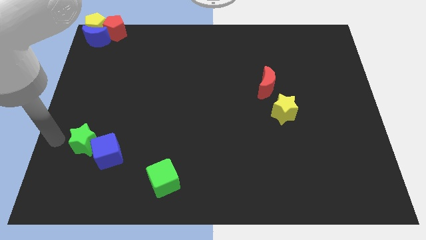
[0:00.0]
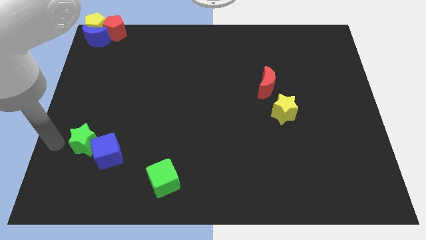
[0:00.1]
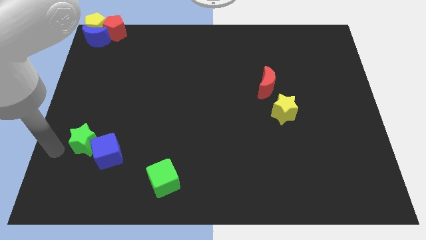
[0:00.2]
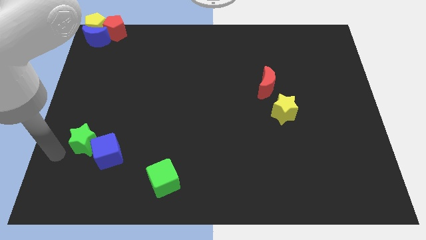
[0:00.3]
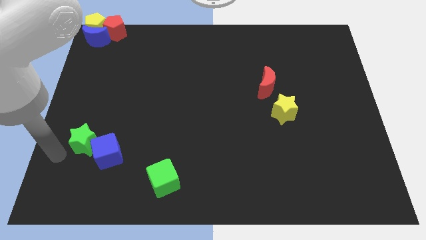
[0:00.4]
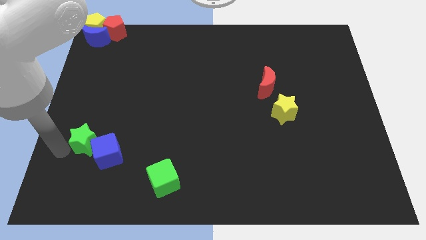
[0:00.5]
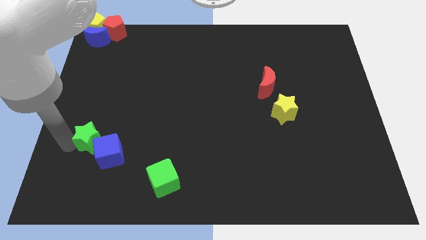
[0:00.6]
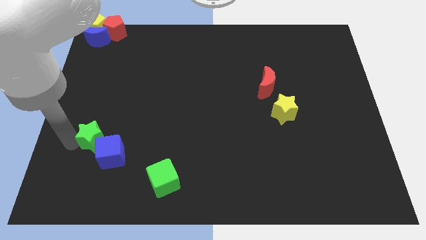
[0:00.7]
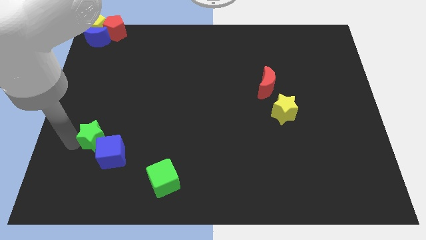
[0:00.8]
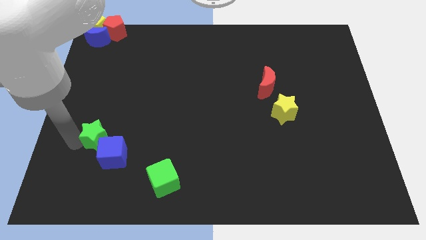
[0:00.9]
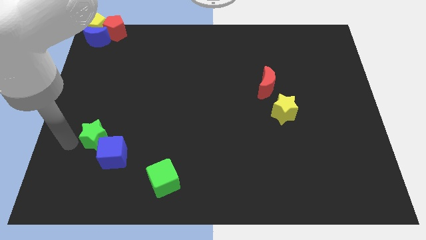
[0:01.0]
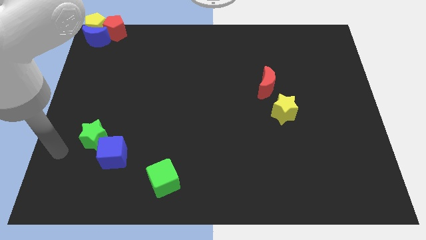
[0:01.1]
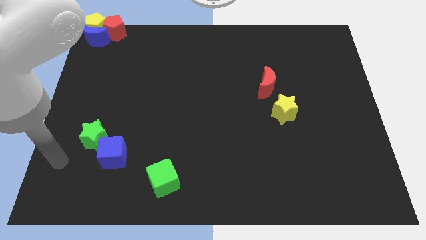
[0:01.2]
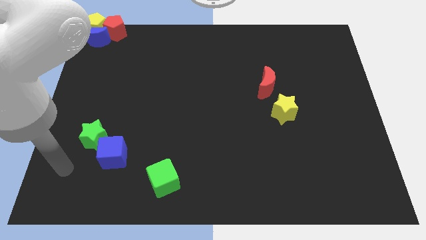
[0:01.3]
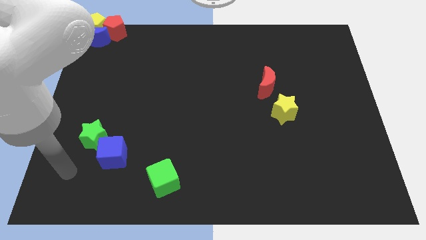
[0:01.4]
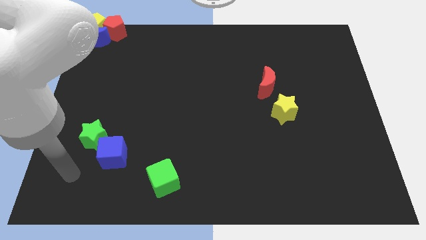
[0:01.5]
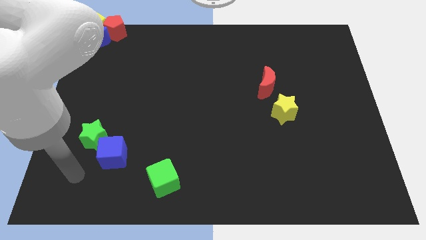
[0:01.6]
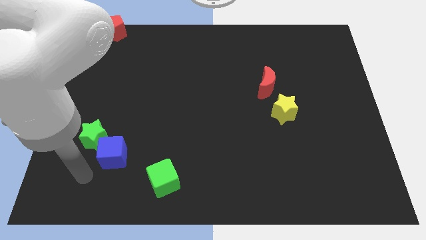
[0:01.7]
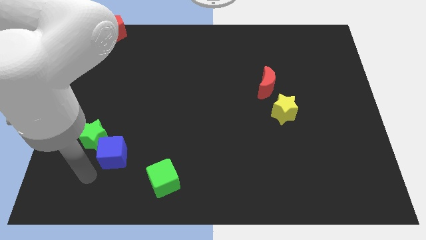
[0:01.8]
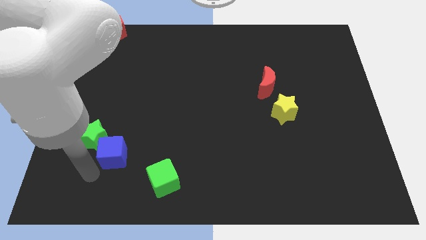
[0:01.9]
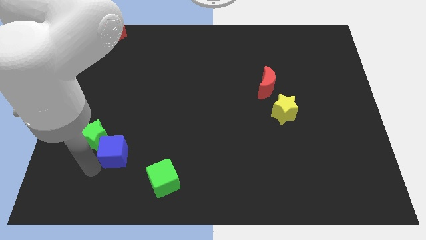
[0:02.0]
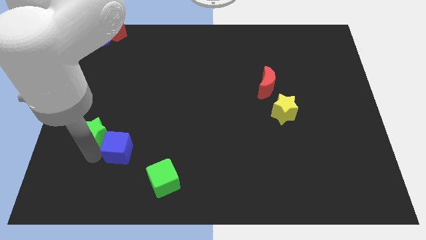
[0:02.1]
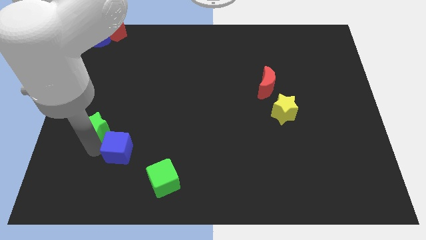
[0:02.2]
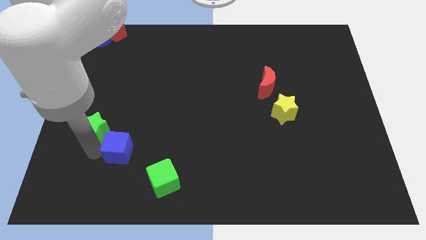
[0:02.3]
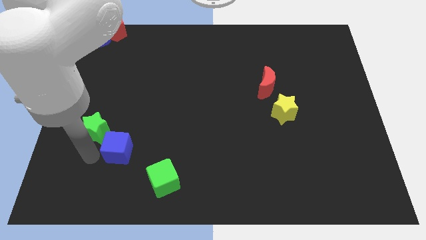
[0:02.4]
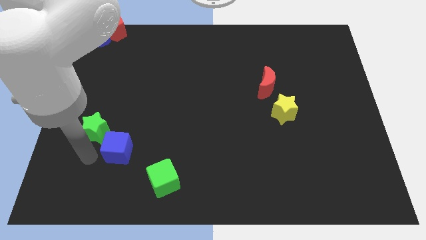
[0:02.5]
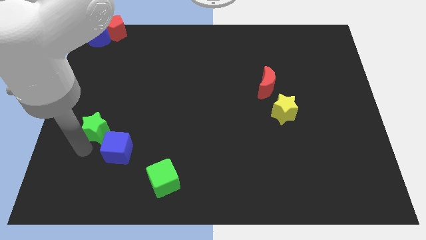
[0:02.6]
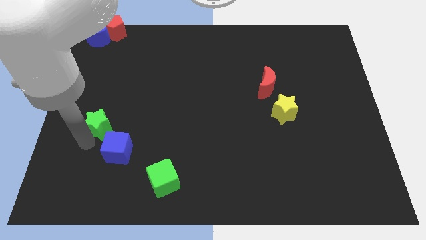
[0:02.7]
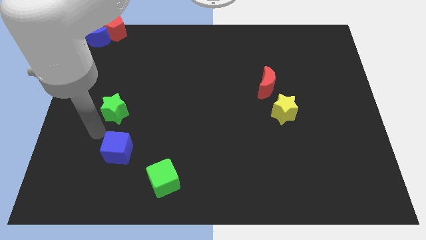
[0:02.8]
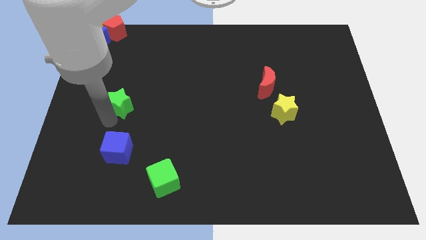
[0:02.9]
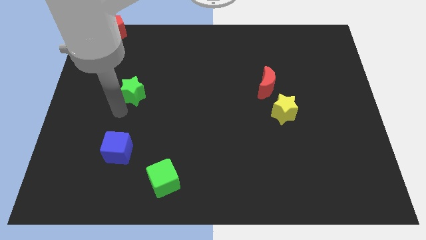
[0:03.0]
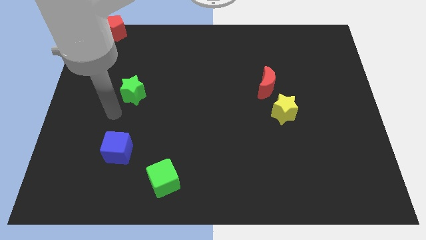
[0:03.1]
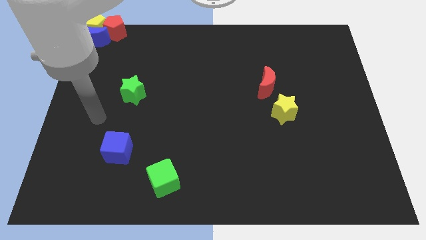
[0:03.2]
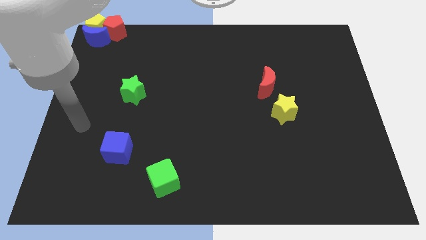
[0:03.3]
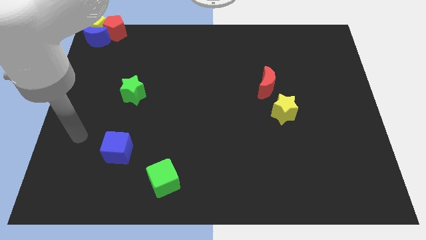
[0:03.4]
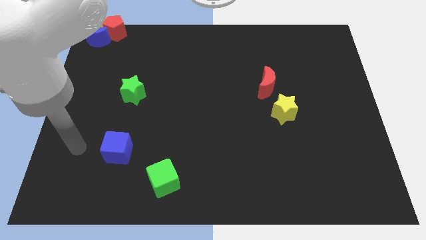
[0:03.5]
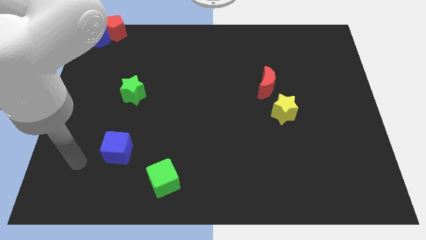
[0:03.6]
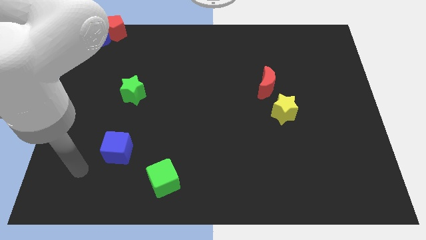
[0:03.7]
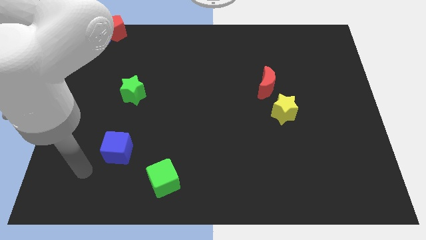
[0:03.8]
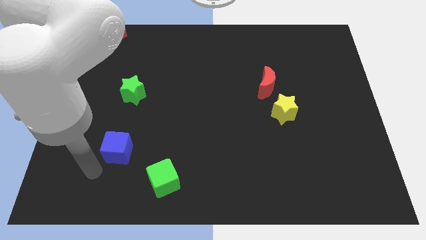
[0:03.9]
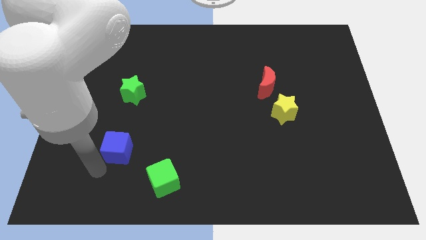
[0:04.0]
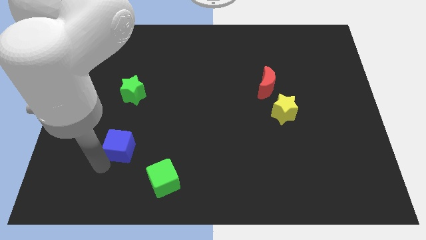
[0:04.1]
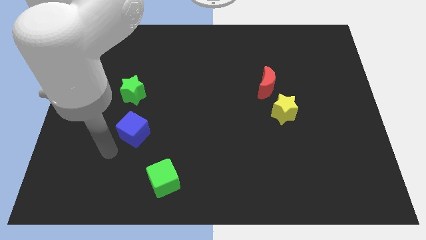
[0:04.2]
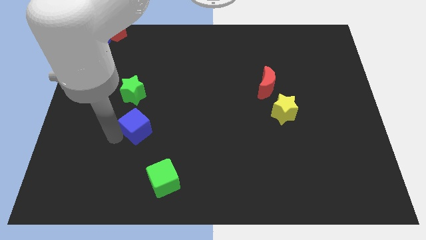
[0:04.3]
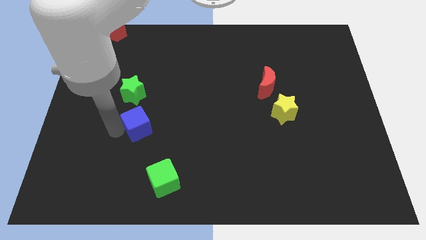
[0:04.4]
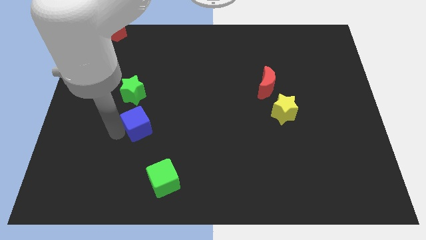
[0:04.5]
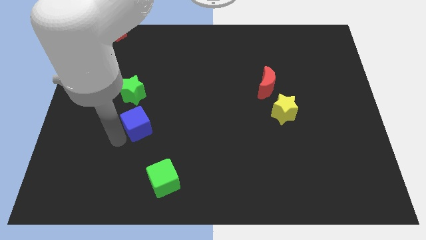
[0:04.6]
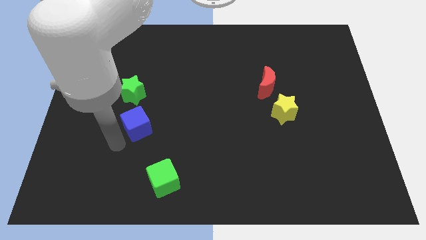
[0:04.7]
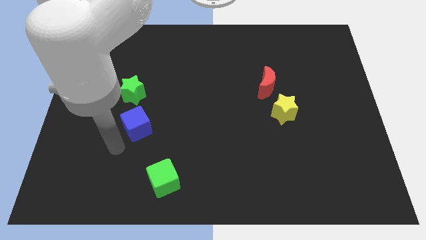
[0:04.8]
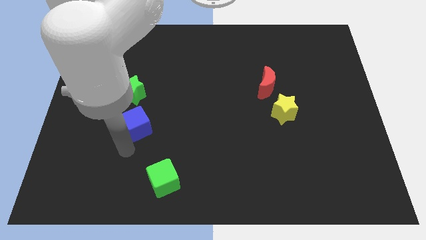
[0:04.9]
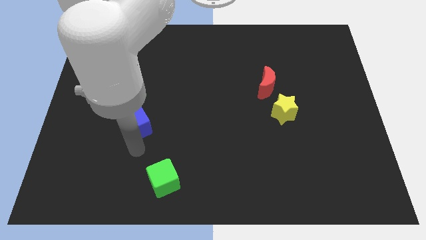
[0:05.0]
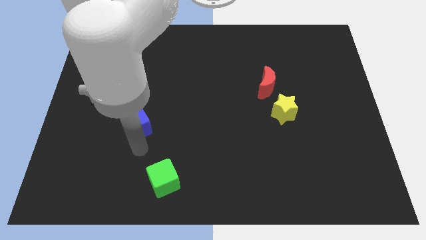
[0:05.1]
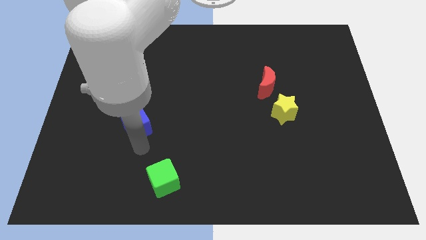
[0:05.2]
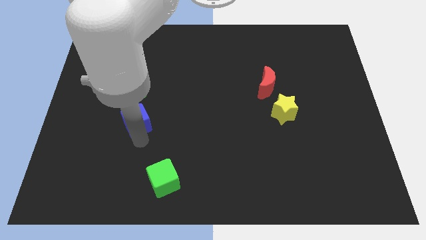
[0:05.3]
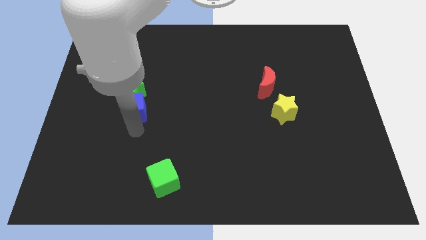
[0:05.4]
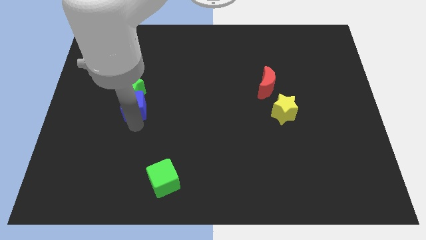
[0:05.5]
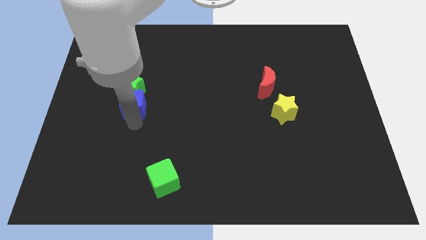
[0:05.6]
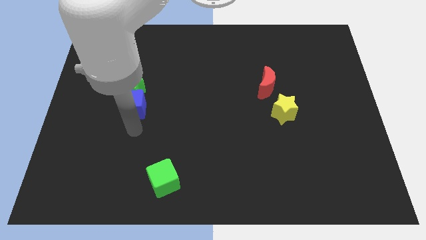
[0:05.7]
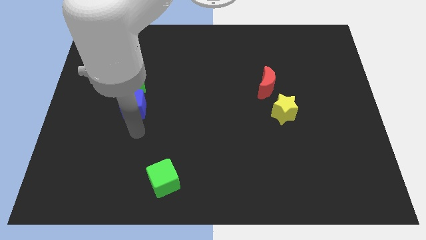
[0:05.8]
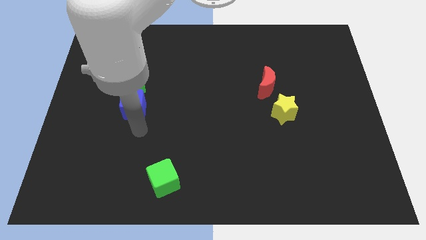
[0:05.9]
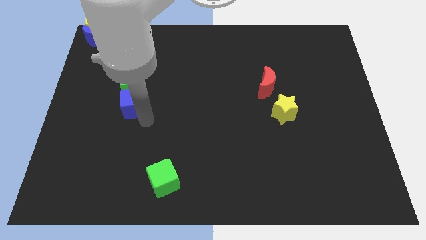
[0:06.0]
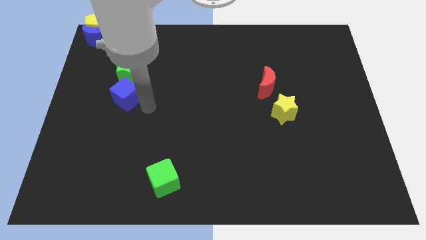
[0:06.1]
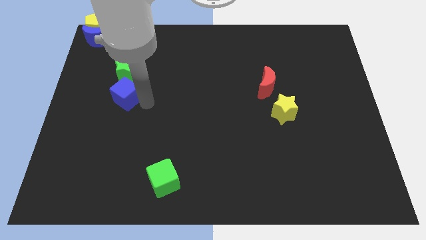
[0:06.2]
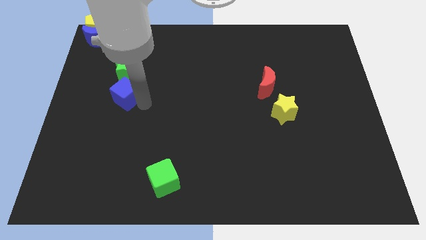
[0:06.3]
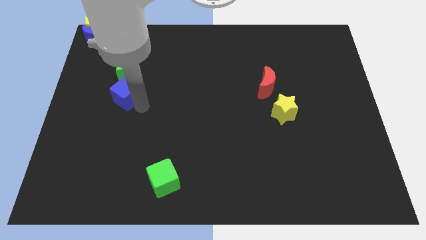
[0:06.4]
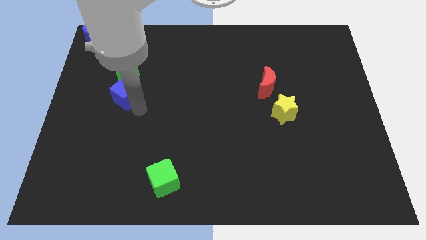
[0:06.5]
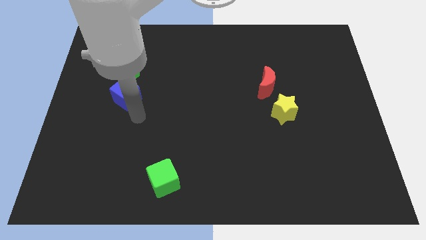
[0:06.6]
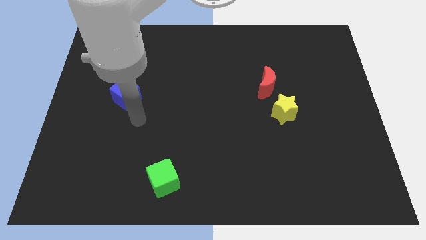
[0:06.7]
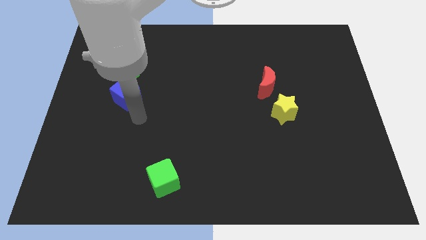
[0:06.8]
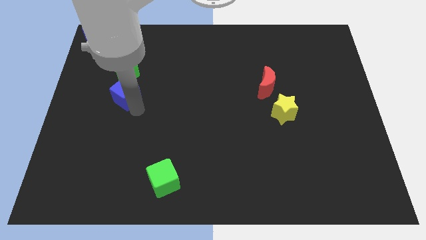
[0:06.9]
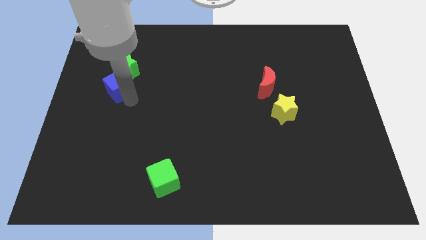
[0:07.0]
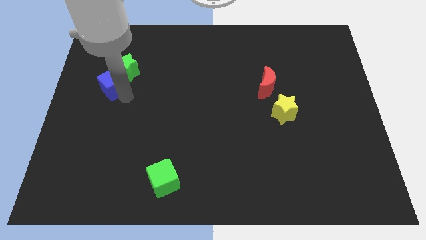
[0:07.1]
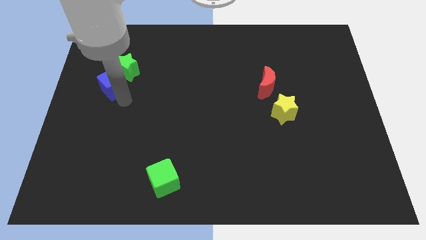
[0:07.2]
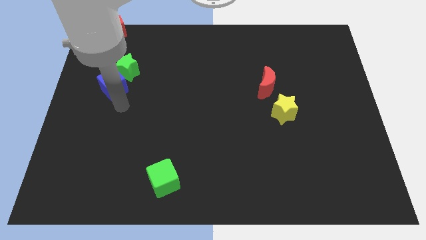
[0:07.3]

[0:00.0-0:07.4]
push the blue cube and green star towards top

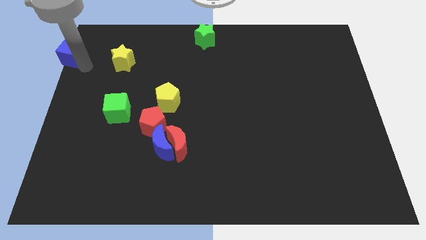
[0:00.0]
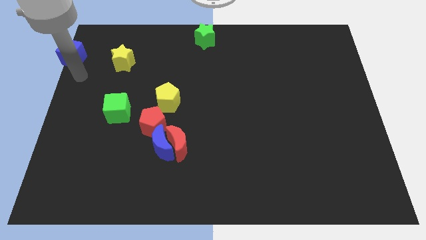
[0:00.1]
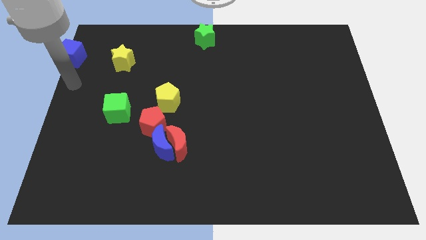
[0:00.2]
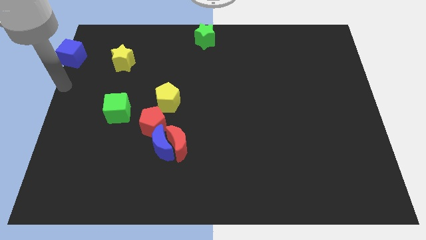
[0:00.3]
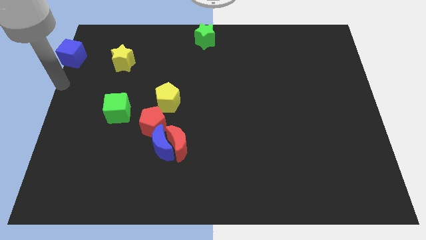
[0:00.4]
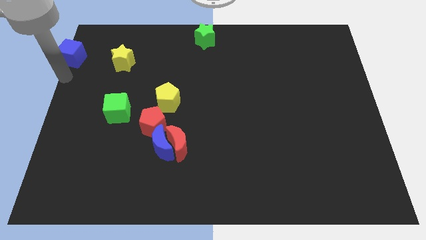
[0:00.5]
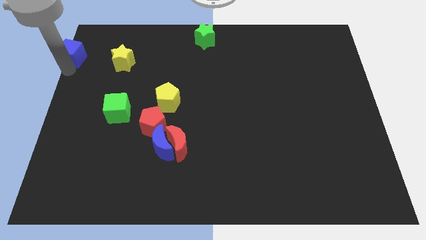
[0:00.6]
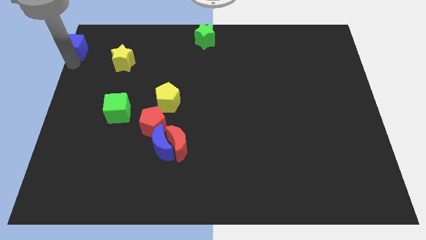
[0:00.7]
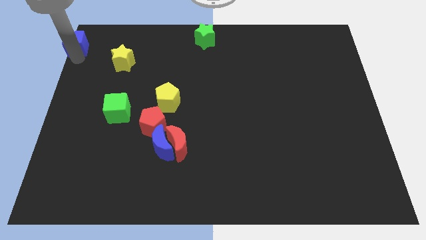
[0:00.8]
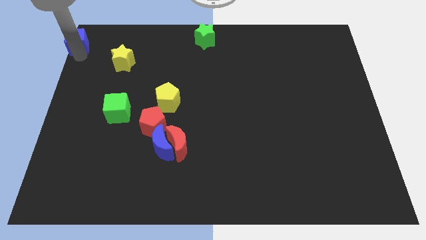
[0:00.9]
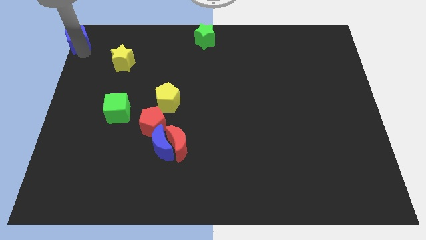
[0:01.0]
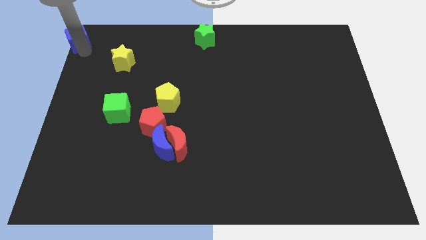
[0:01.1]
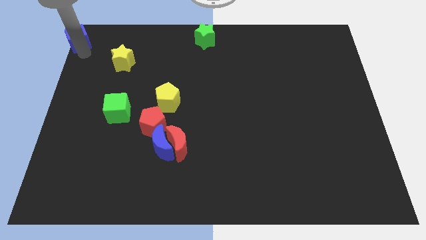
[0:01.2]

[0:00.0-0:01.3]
place the blue cube at the top left corner of the board
